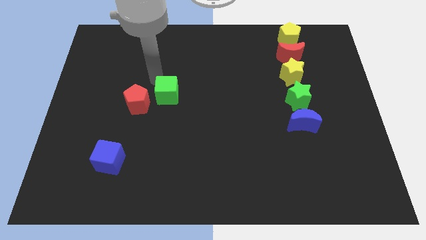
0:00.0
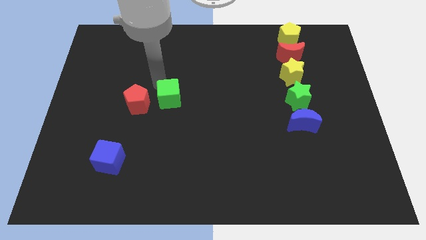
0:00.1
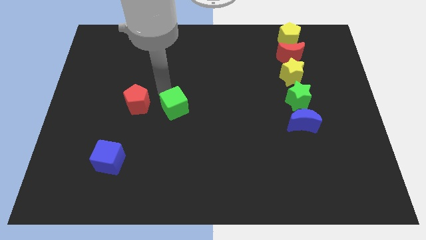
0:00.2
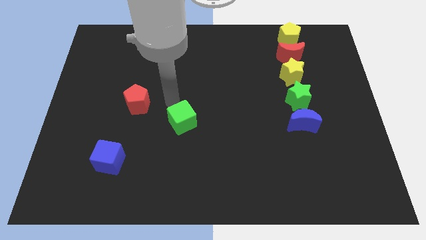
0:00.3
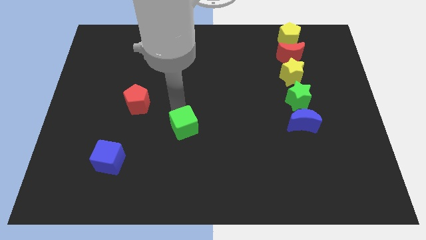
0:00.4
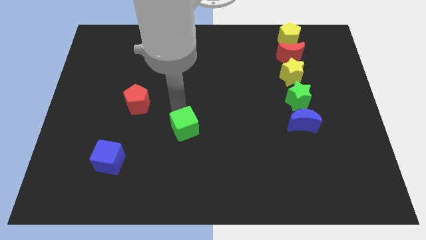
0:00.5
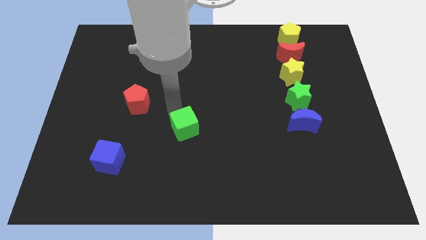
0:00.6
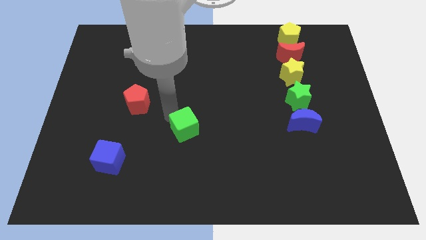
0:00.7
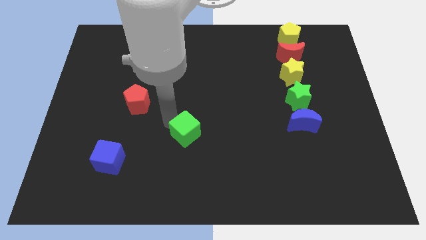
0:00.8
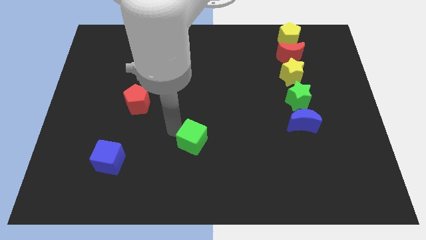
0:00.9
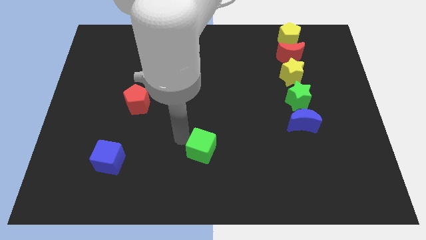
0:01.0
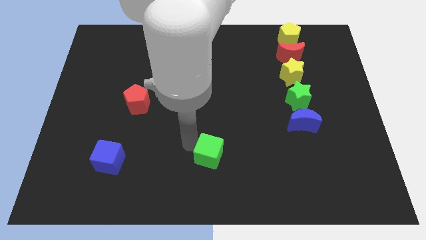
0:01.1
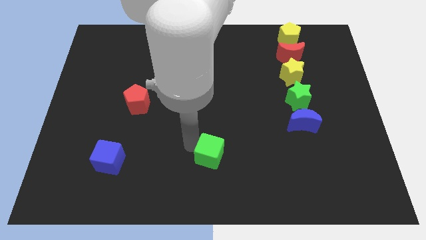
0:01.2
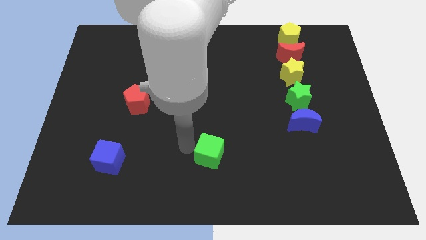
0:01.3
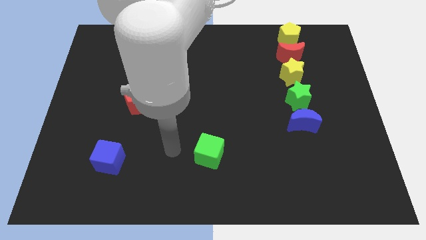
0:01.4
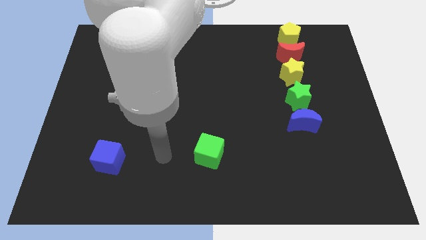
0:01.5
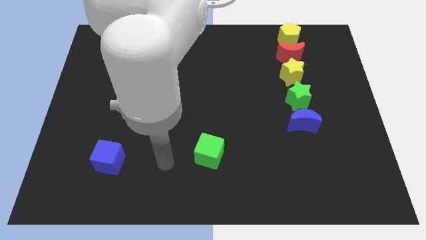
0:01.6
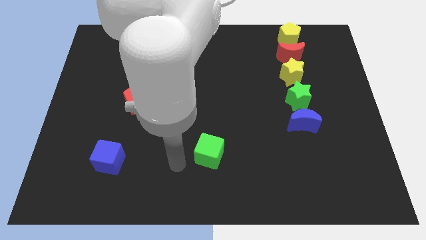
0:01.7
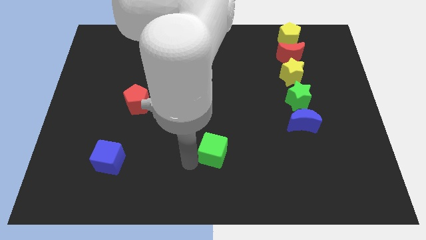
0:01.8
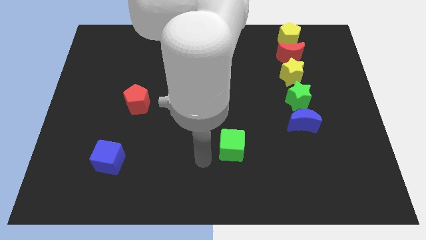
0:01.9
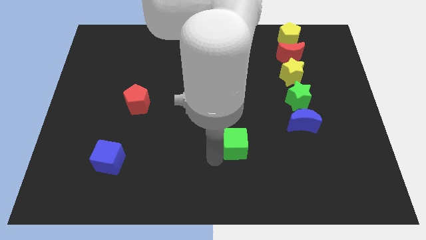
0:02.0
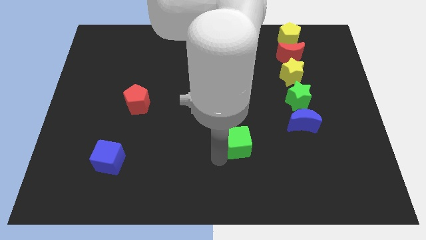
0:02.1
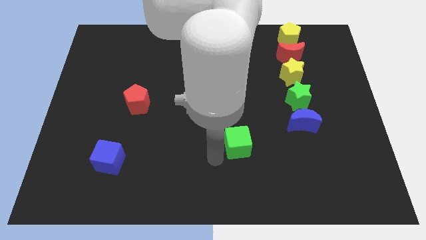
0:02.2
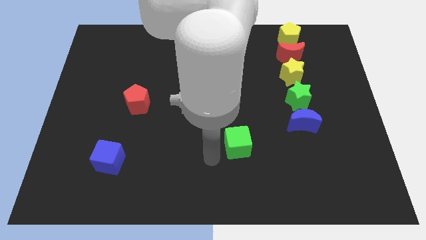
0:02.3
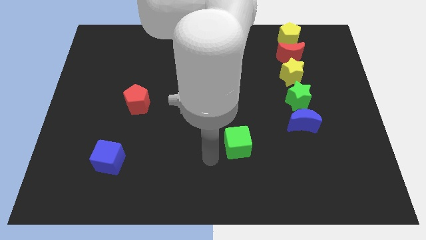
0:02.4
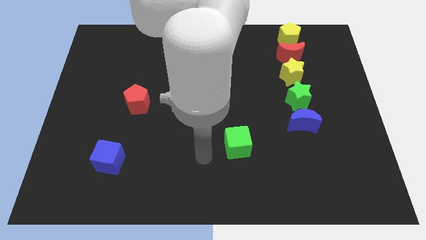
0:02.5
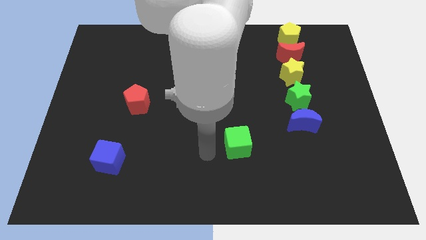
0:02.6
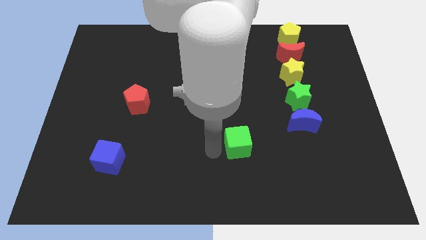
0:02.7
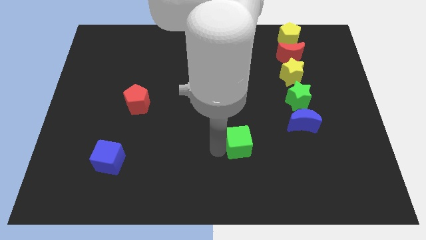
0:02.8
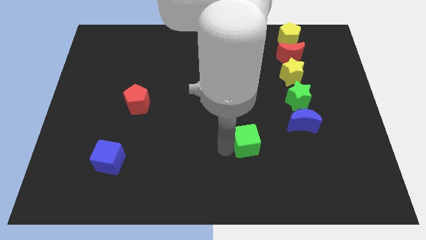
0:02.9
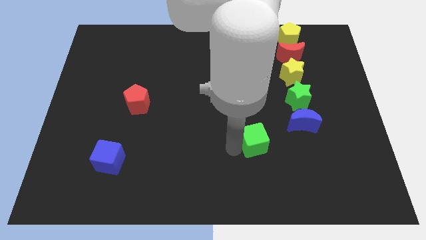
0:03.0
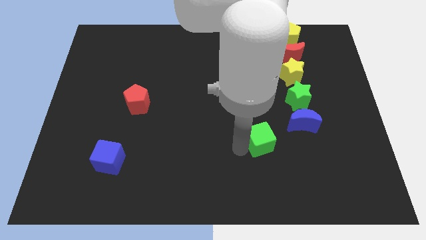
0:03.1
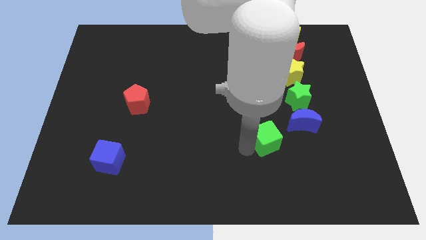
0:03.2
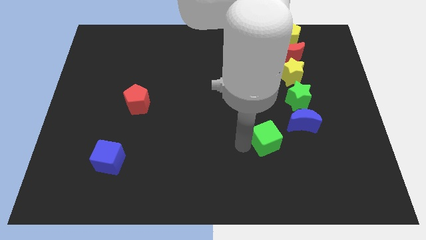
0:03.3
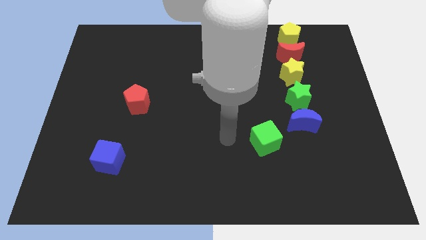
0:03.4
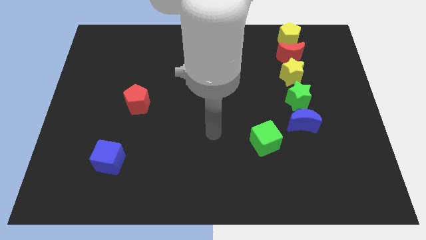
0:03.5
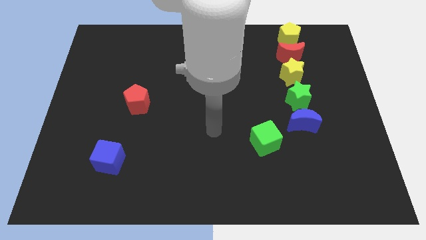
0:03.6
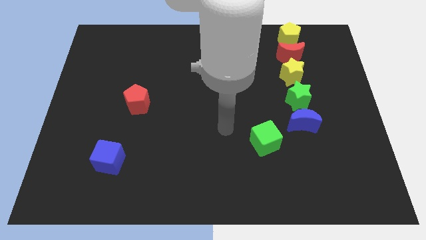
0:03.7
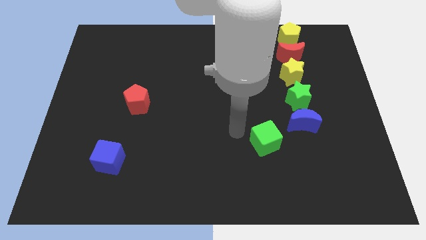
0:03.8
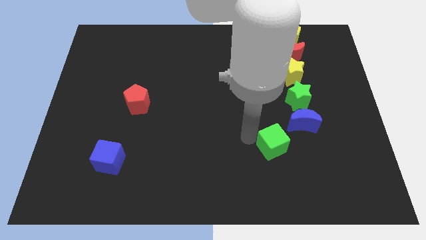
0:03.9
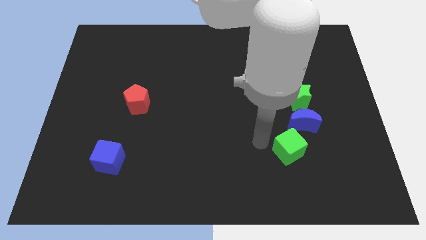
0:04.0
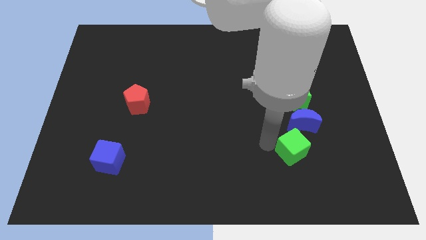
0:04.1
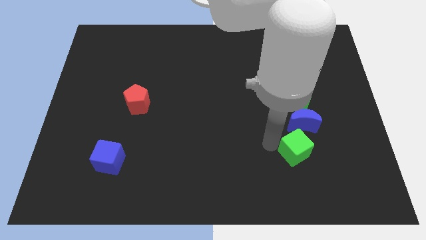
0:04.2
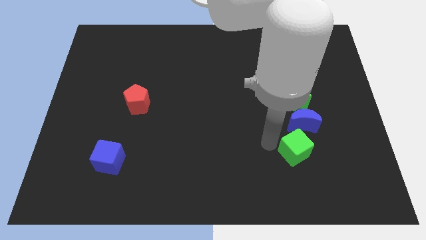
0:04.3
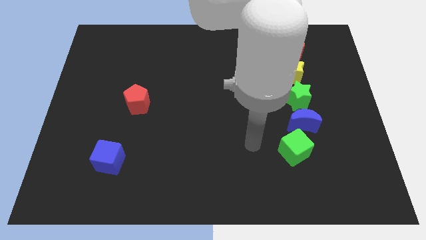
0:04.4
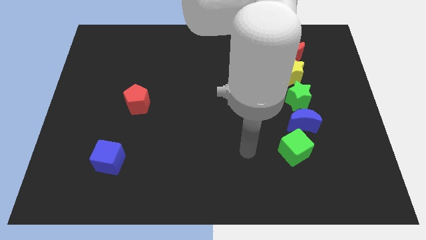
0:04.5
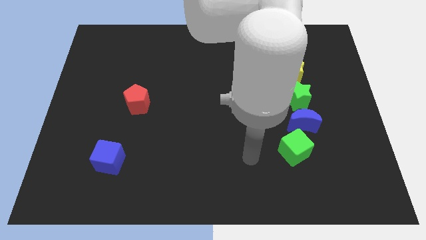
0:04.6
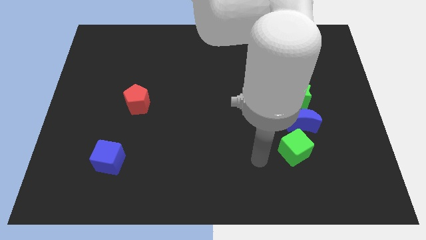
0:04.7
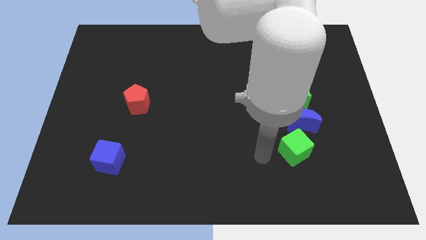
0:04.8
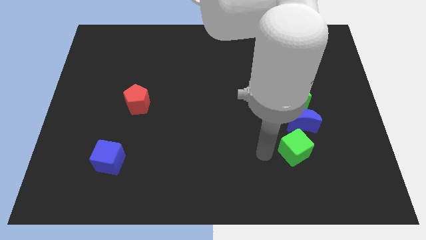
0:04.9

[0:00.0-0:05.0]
place the green cube below the blue crescent

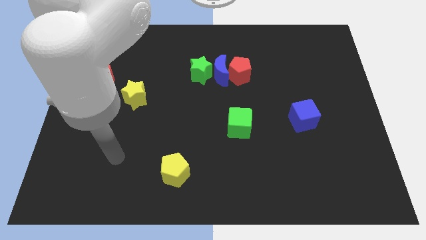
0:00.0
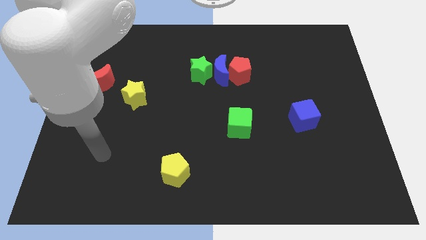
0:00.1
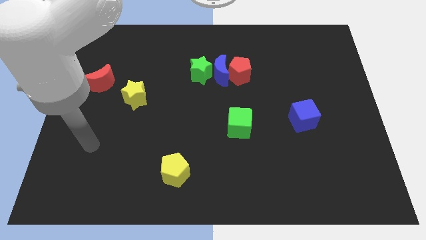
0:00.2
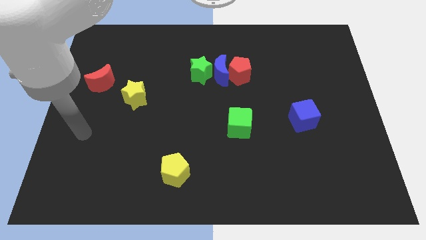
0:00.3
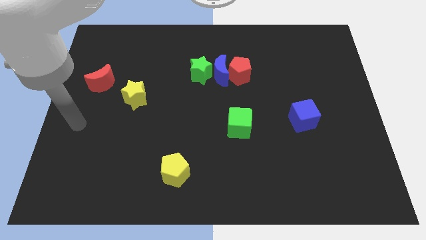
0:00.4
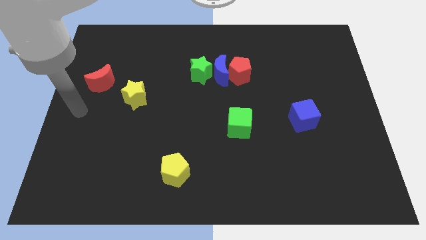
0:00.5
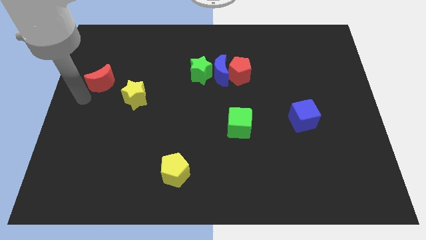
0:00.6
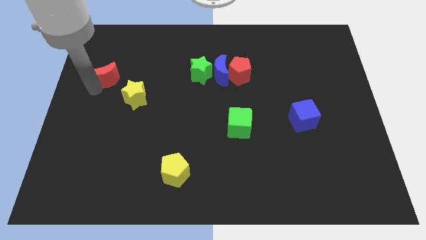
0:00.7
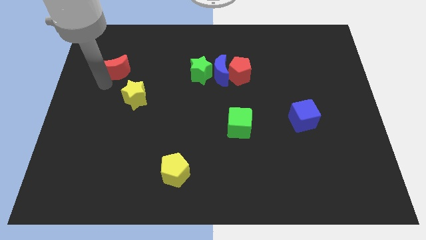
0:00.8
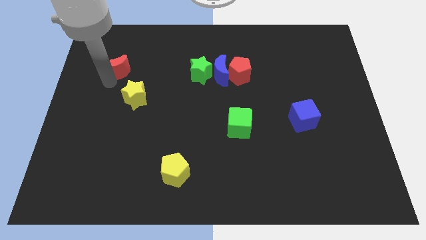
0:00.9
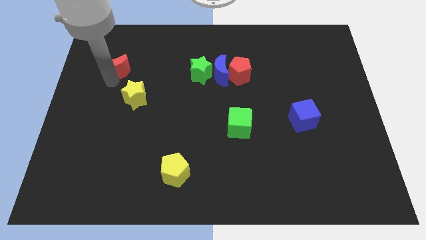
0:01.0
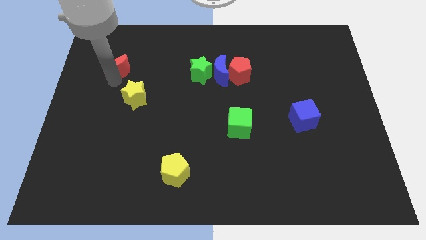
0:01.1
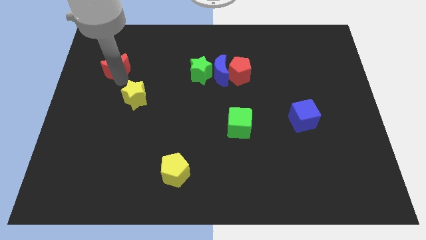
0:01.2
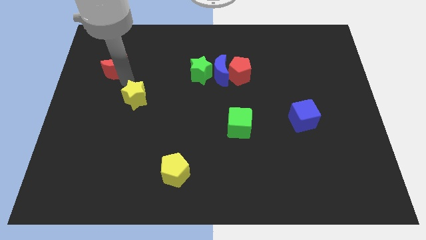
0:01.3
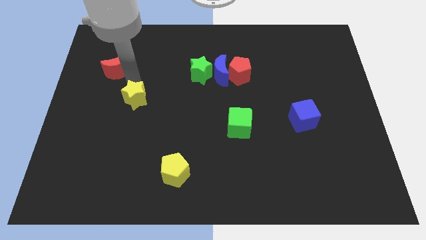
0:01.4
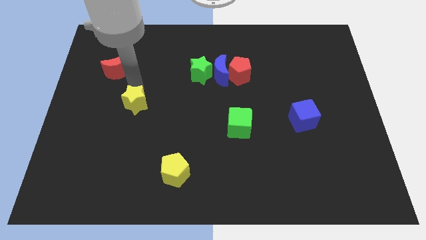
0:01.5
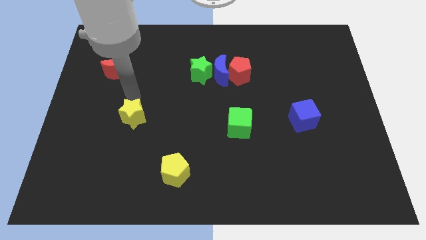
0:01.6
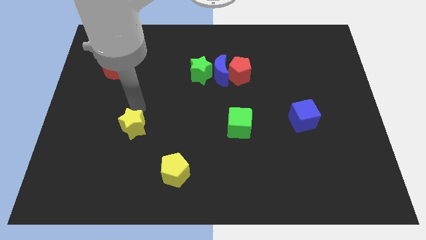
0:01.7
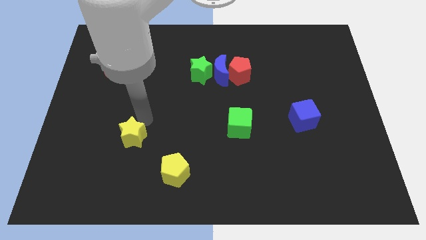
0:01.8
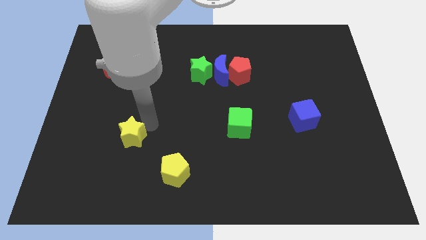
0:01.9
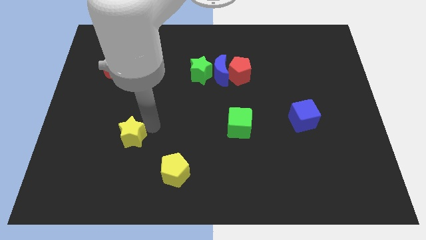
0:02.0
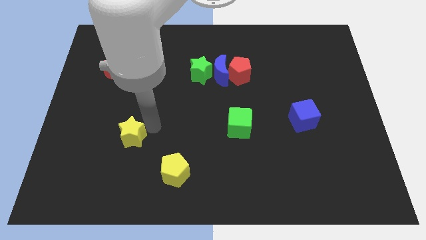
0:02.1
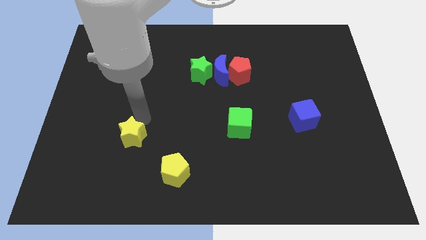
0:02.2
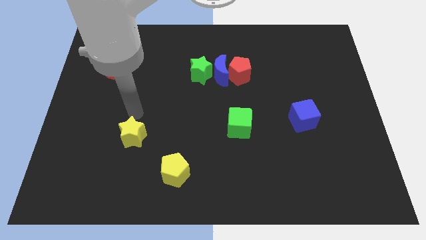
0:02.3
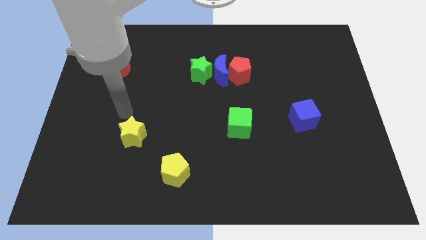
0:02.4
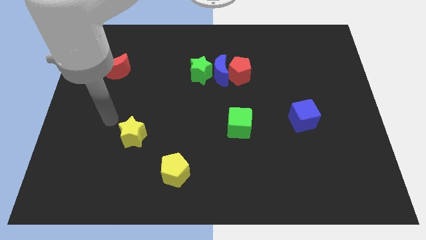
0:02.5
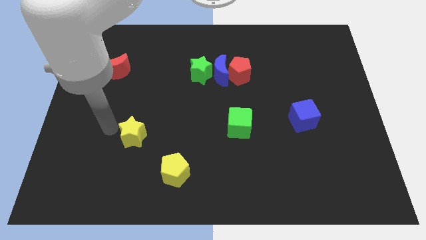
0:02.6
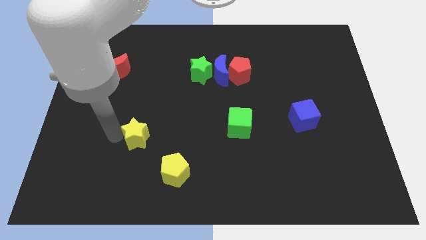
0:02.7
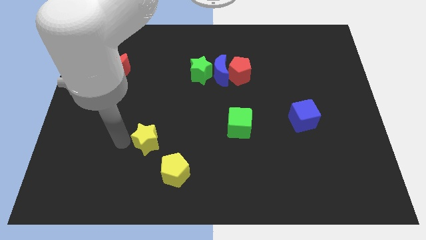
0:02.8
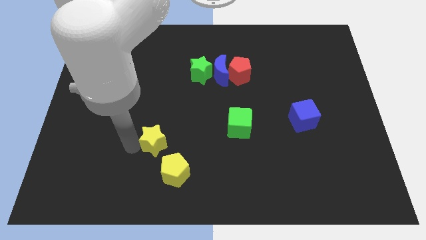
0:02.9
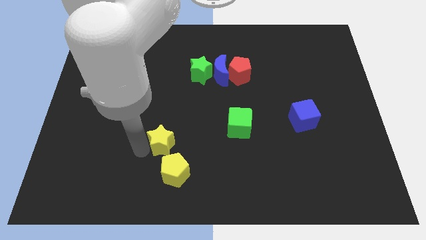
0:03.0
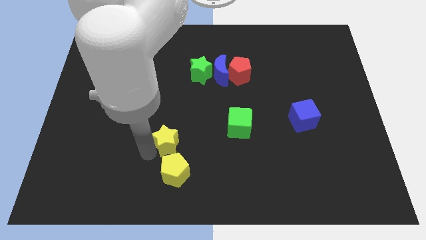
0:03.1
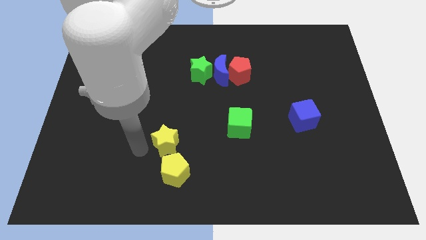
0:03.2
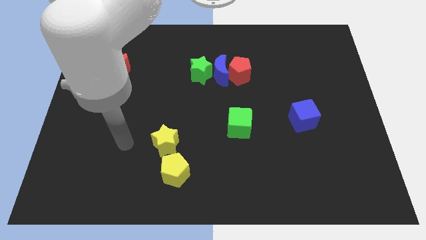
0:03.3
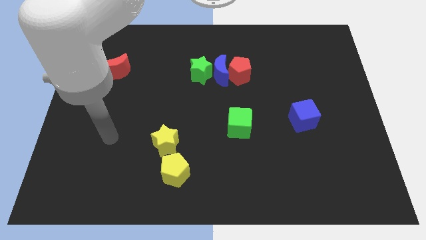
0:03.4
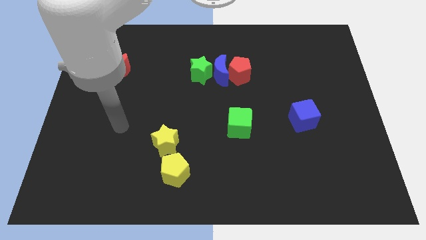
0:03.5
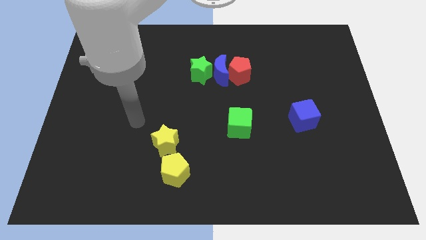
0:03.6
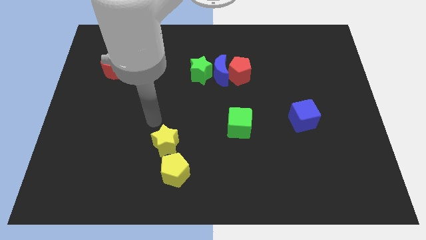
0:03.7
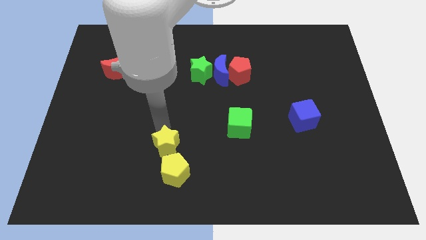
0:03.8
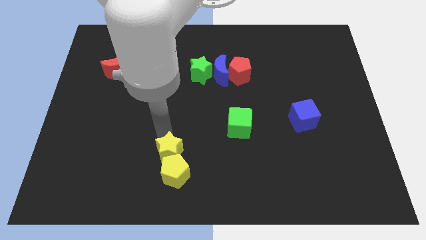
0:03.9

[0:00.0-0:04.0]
push the yellow star into the yellow pentagon
